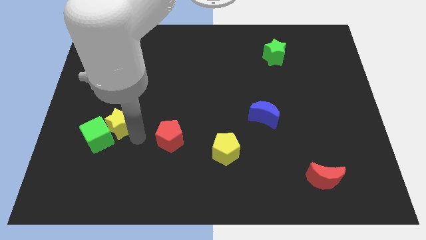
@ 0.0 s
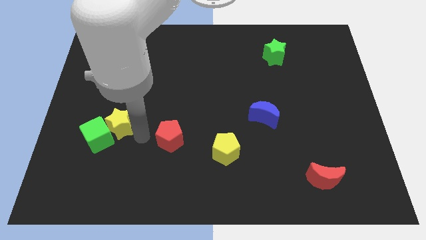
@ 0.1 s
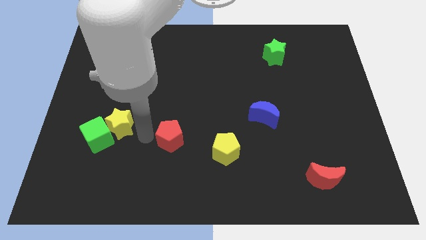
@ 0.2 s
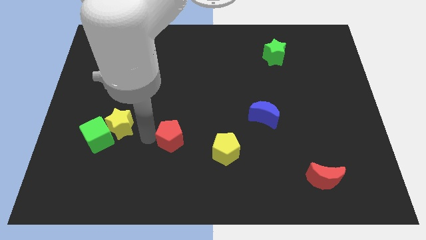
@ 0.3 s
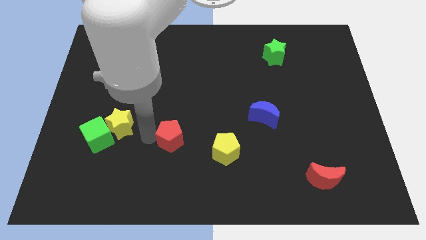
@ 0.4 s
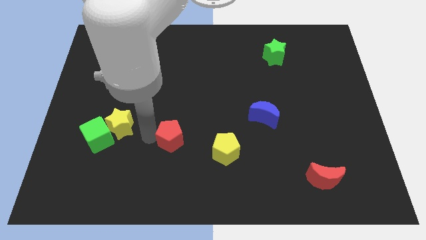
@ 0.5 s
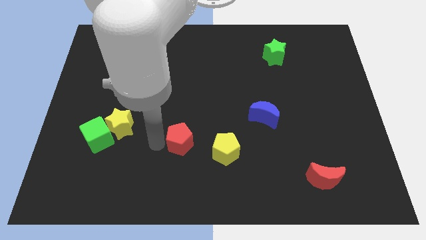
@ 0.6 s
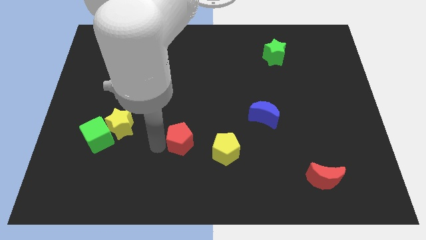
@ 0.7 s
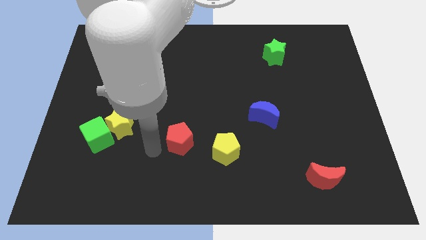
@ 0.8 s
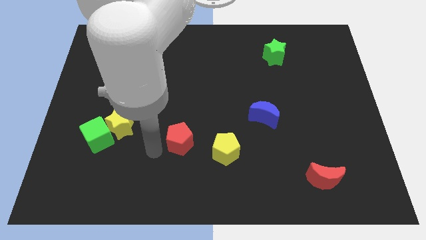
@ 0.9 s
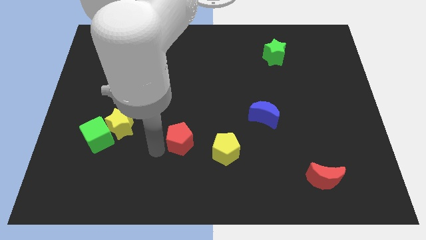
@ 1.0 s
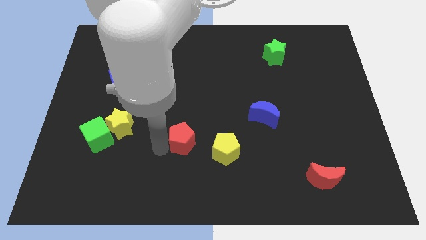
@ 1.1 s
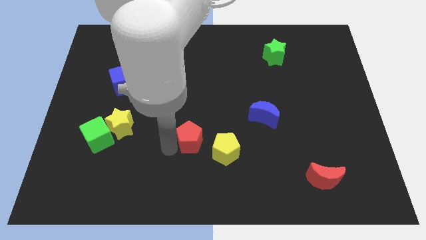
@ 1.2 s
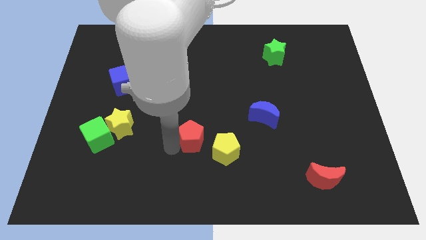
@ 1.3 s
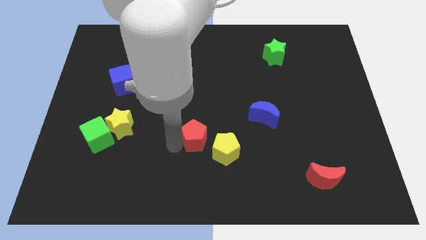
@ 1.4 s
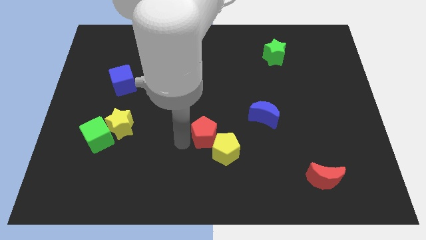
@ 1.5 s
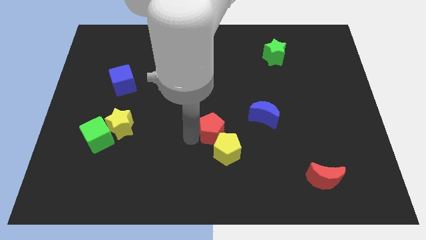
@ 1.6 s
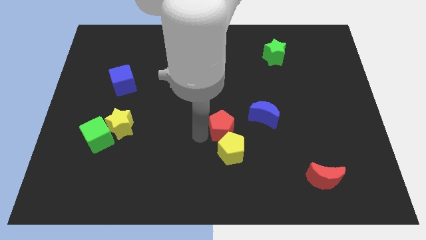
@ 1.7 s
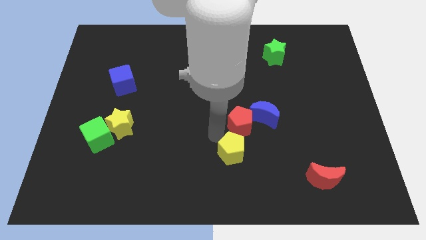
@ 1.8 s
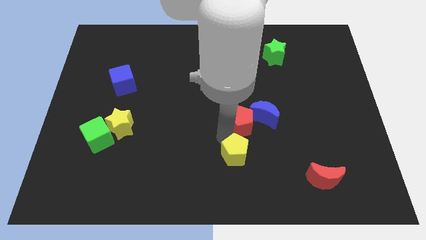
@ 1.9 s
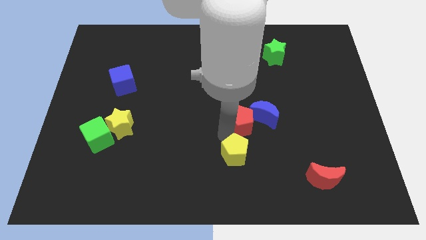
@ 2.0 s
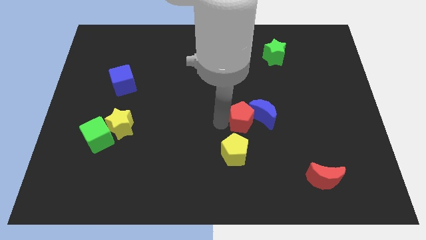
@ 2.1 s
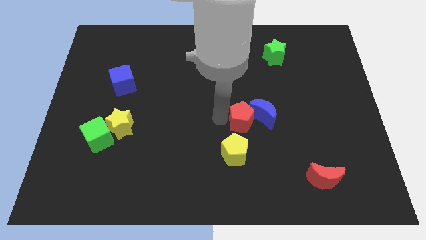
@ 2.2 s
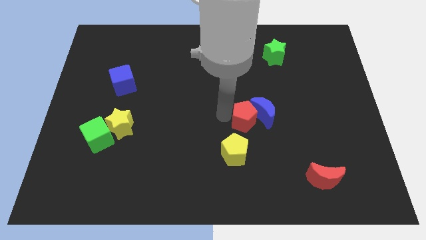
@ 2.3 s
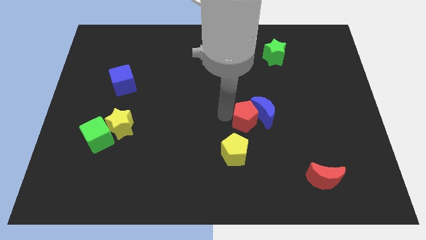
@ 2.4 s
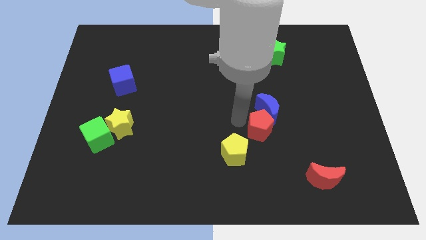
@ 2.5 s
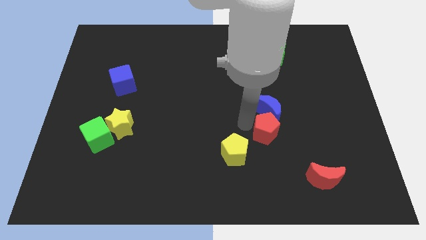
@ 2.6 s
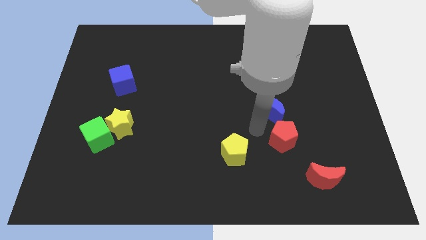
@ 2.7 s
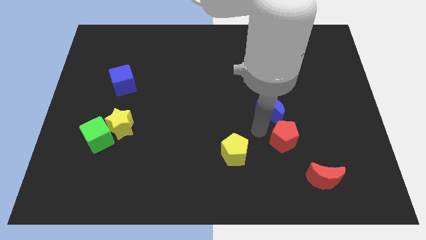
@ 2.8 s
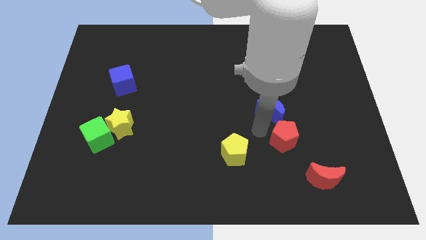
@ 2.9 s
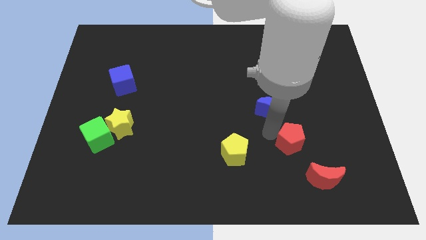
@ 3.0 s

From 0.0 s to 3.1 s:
place the red pentagon down to the blue moon

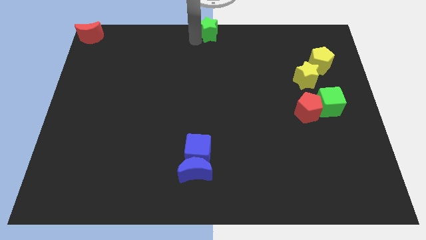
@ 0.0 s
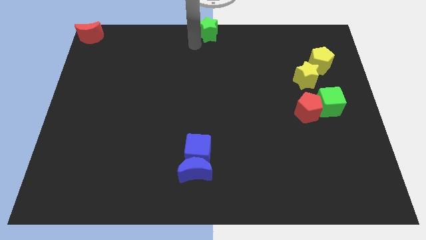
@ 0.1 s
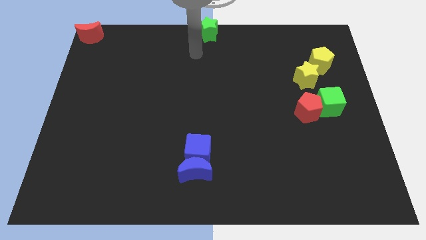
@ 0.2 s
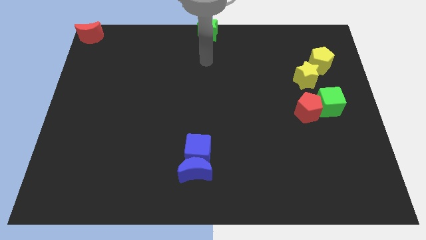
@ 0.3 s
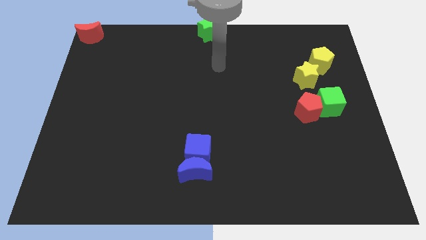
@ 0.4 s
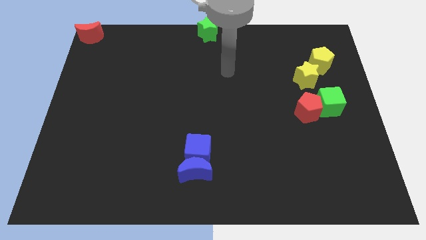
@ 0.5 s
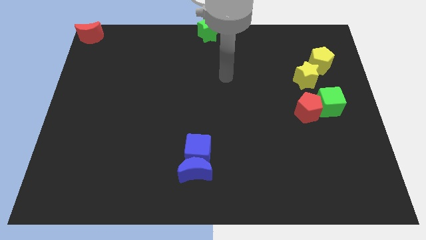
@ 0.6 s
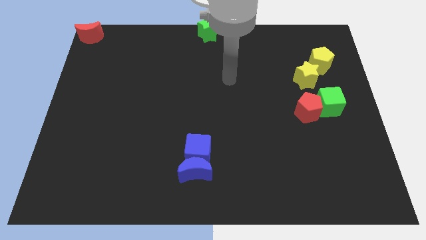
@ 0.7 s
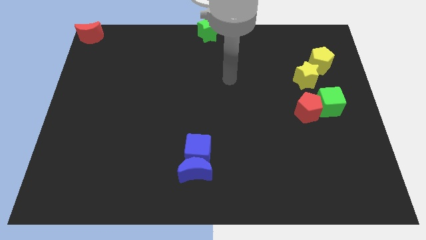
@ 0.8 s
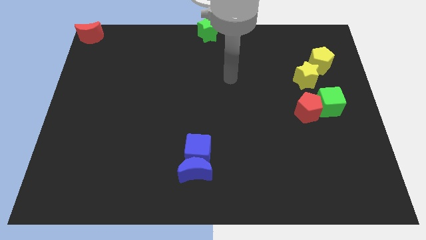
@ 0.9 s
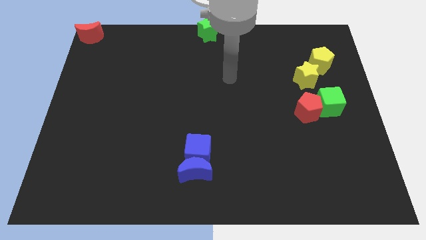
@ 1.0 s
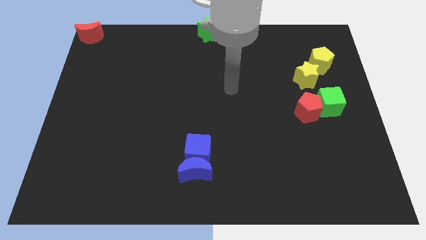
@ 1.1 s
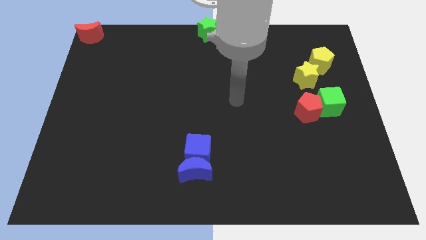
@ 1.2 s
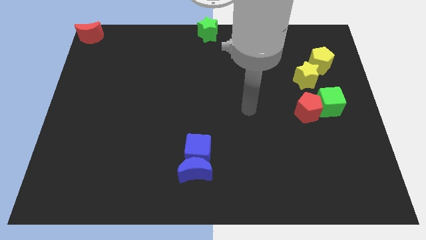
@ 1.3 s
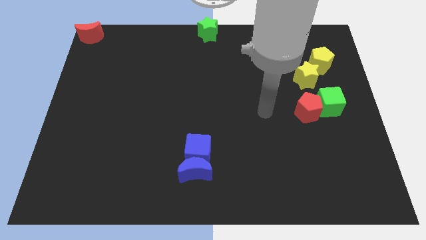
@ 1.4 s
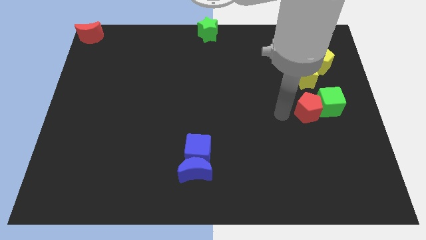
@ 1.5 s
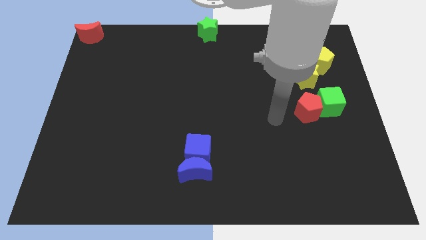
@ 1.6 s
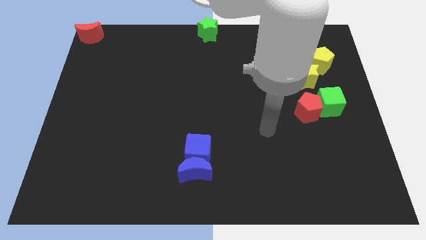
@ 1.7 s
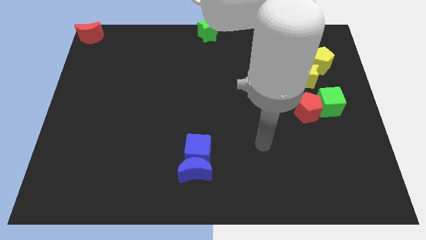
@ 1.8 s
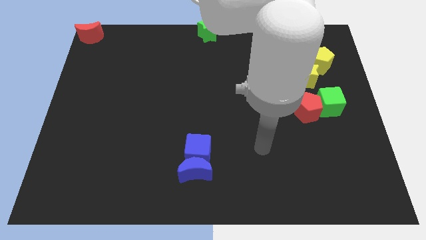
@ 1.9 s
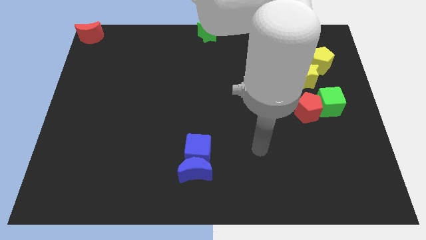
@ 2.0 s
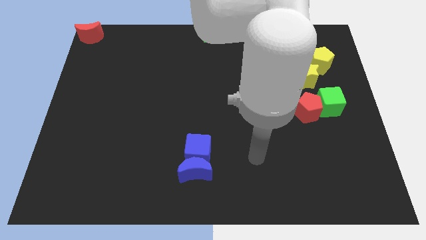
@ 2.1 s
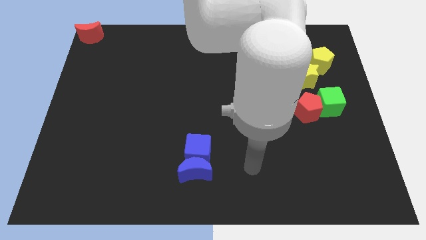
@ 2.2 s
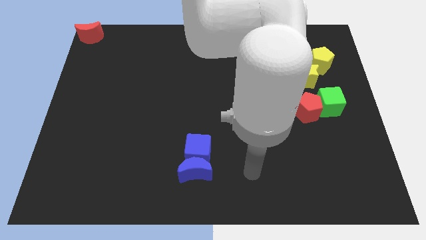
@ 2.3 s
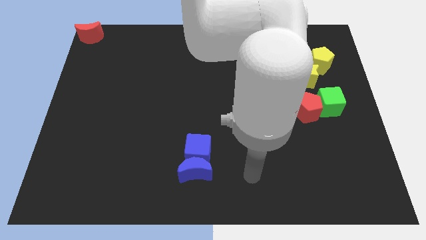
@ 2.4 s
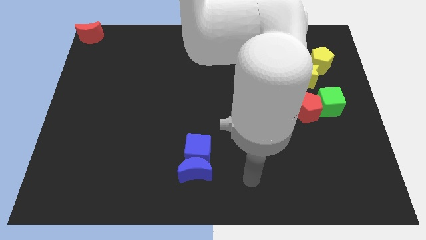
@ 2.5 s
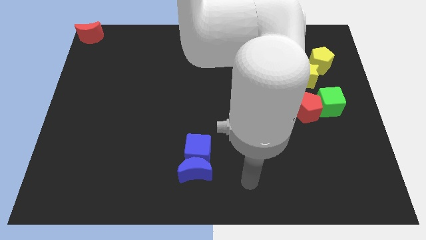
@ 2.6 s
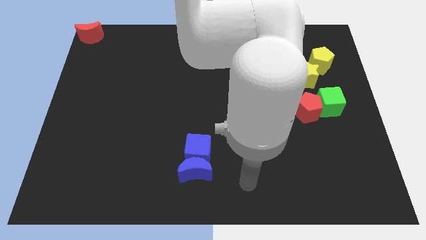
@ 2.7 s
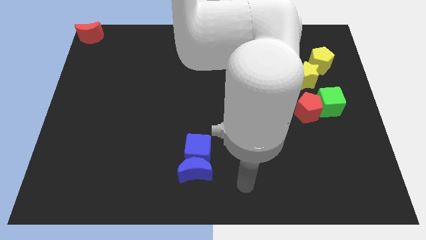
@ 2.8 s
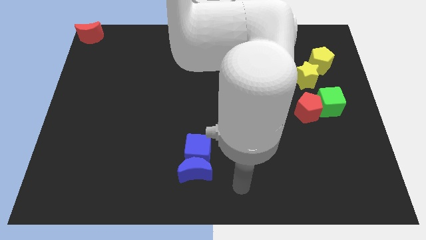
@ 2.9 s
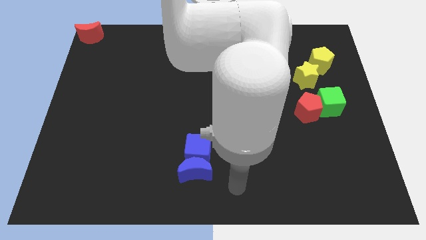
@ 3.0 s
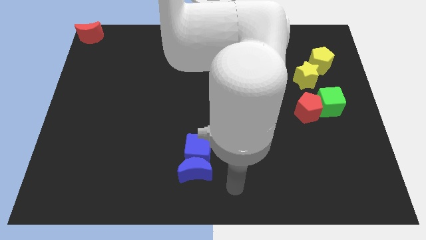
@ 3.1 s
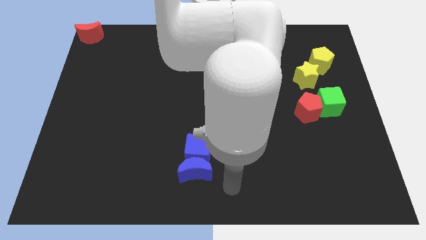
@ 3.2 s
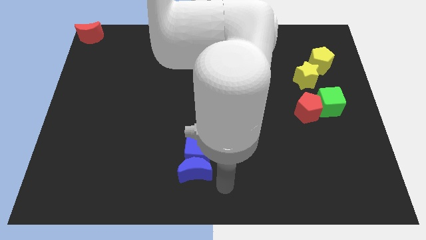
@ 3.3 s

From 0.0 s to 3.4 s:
move your arm to the right of blue moon

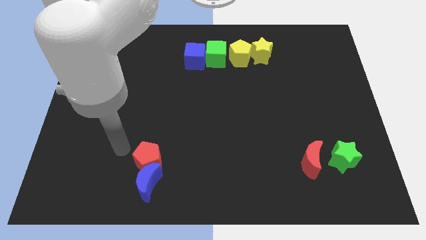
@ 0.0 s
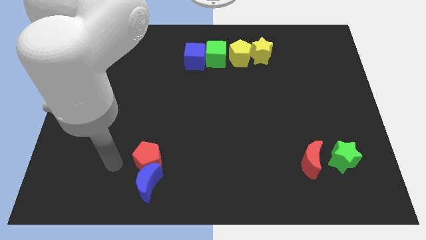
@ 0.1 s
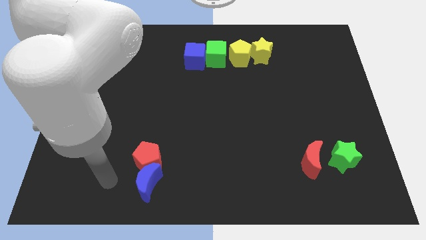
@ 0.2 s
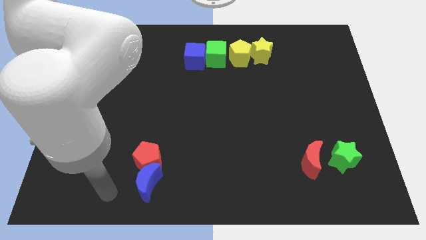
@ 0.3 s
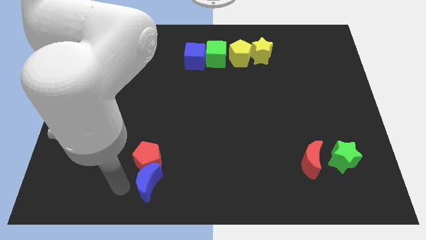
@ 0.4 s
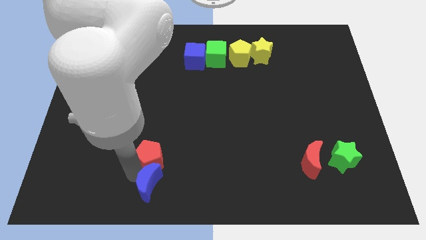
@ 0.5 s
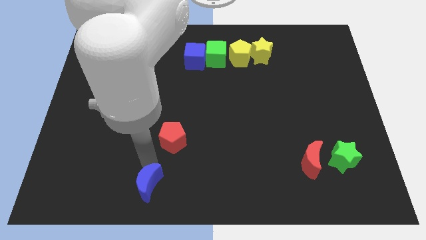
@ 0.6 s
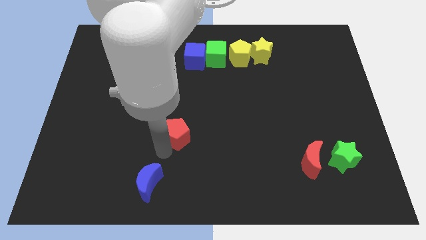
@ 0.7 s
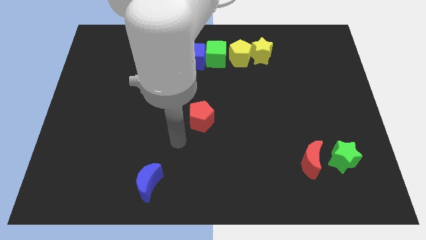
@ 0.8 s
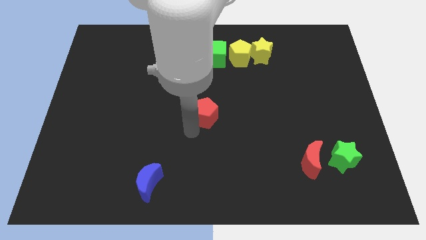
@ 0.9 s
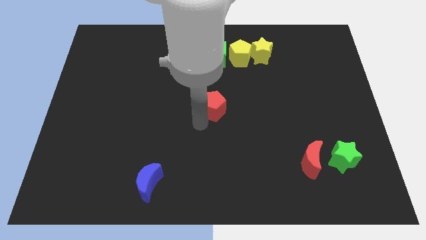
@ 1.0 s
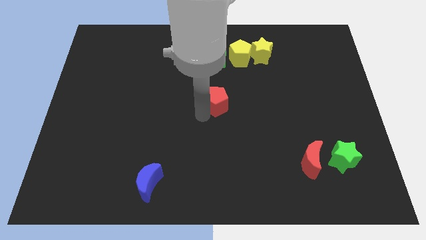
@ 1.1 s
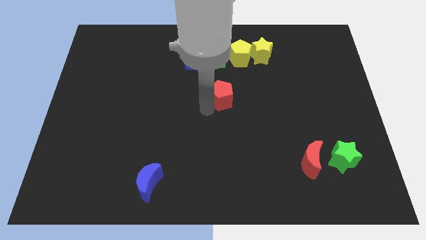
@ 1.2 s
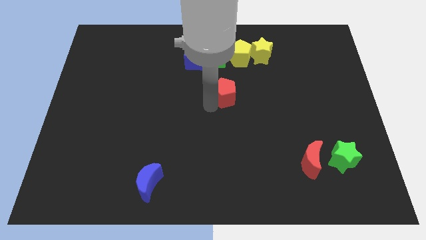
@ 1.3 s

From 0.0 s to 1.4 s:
place the red pentagon below the green cube

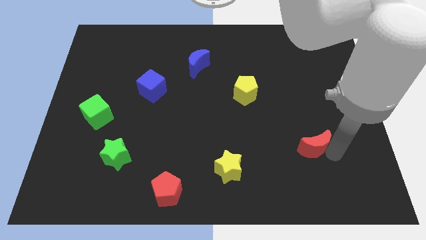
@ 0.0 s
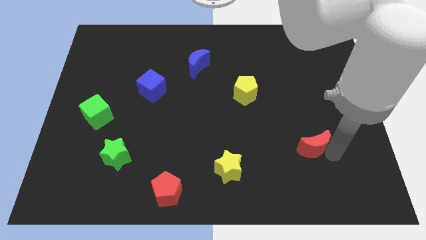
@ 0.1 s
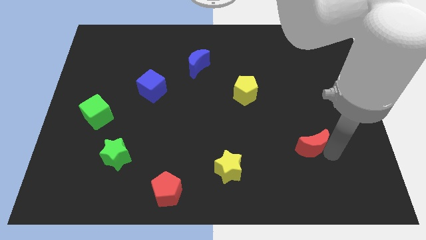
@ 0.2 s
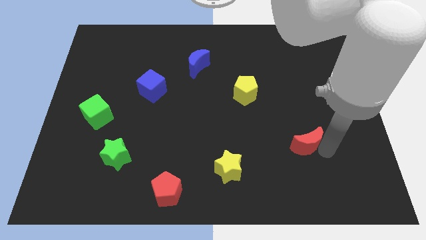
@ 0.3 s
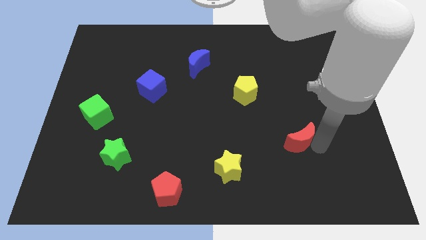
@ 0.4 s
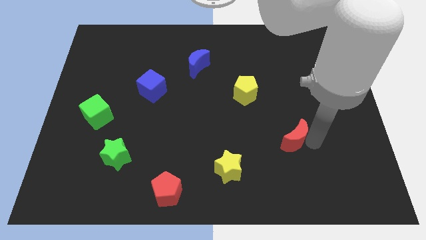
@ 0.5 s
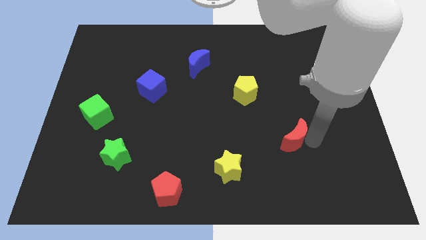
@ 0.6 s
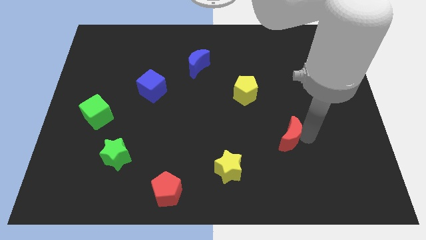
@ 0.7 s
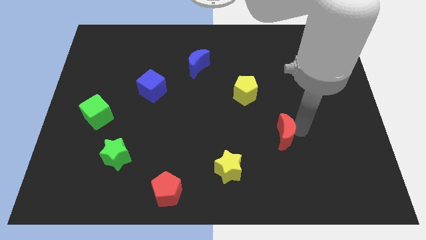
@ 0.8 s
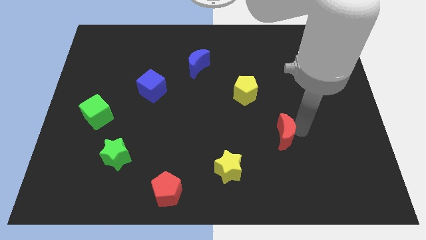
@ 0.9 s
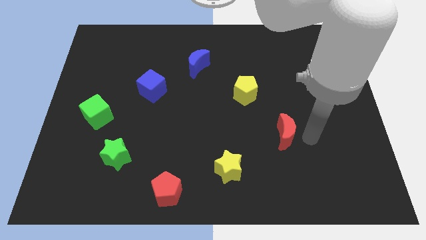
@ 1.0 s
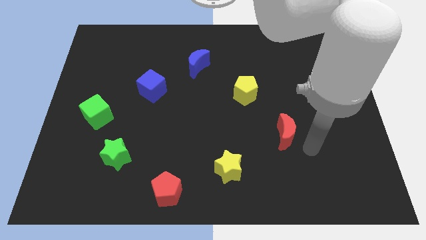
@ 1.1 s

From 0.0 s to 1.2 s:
push the red crescent to the right of the yellow star
